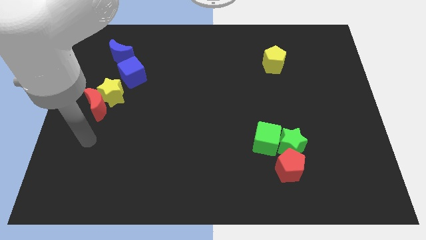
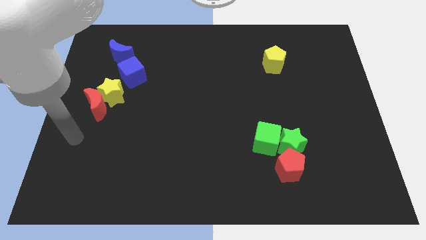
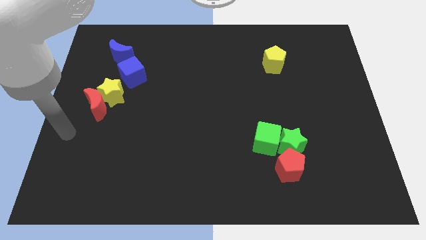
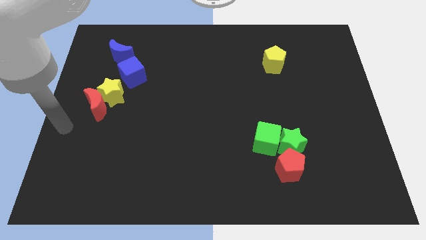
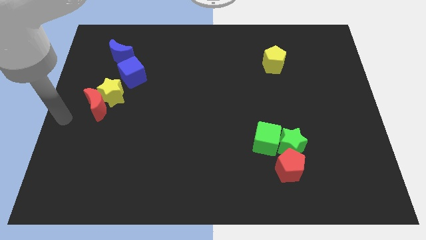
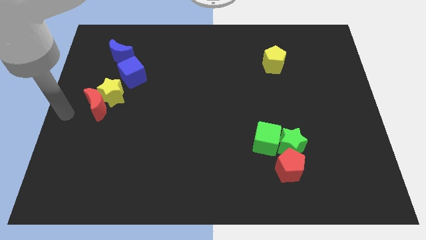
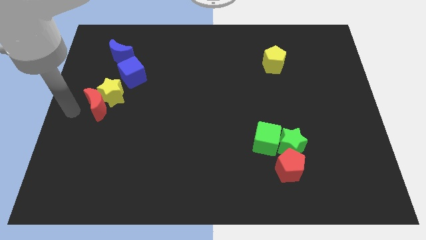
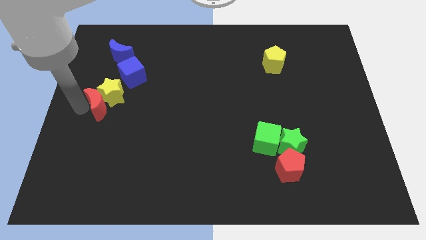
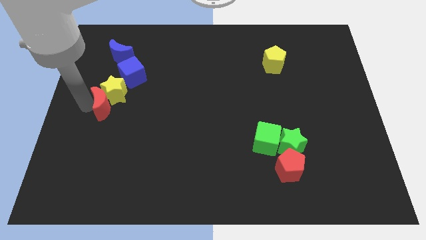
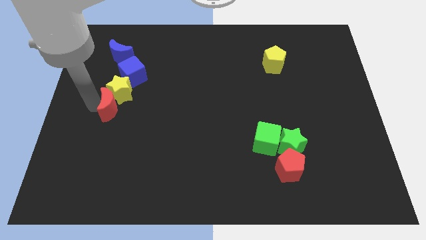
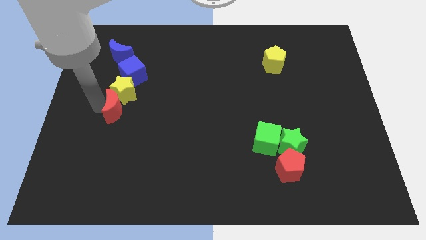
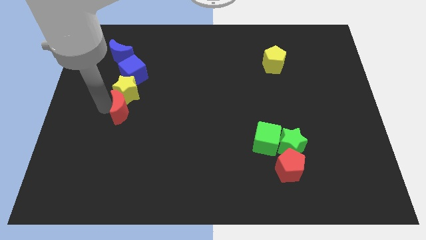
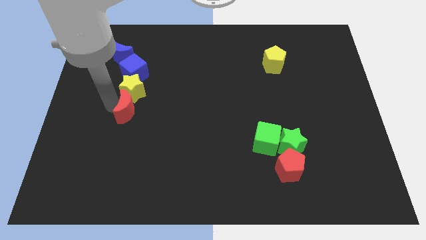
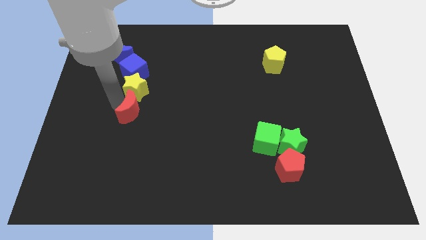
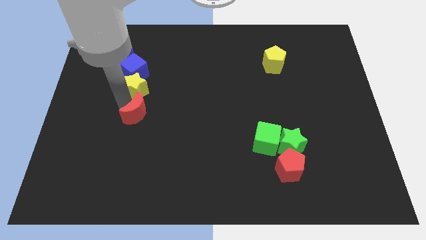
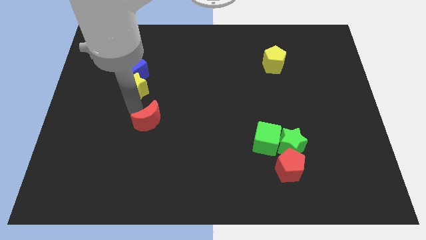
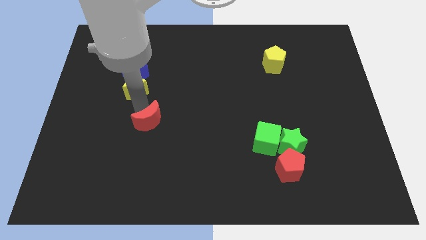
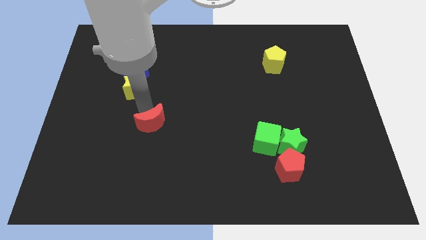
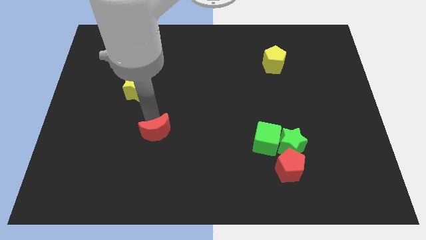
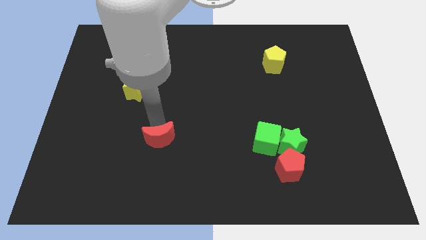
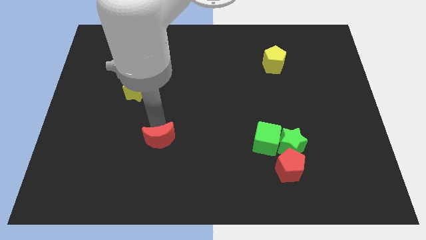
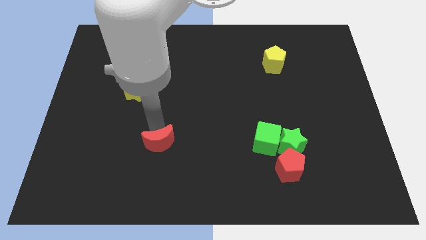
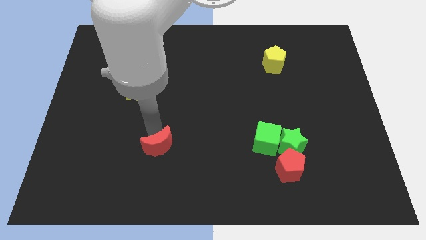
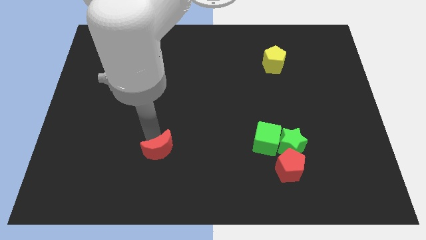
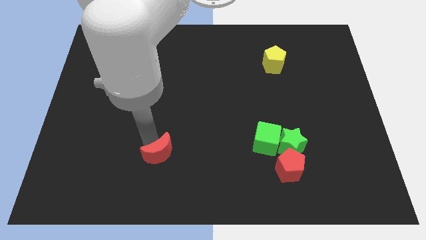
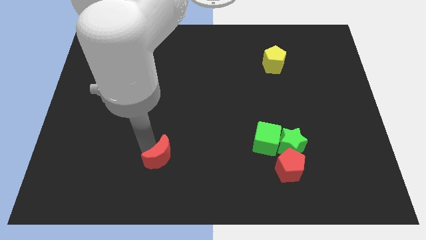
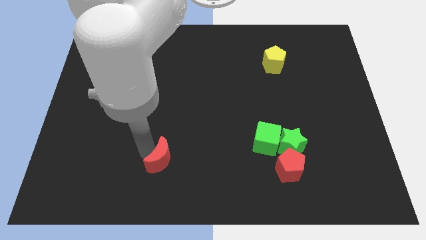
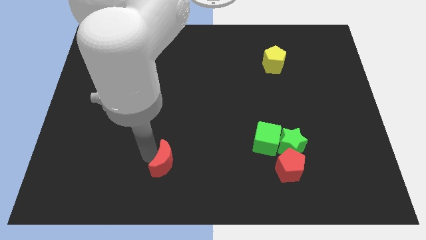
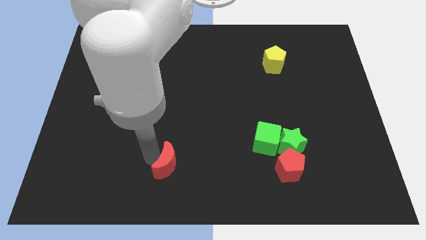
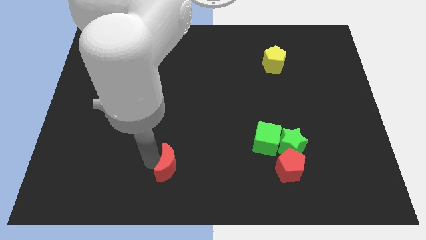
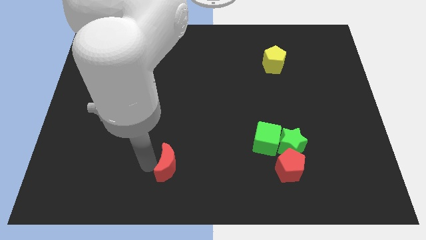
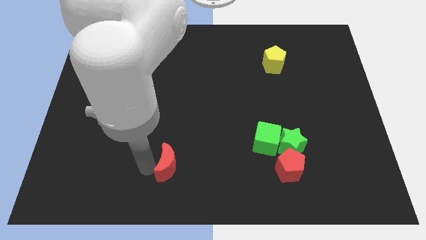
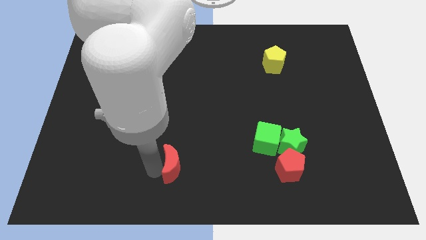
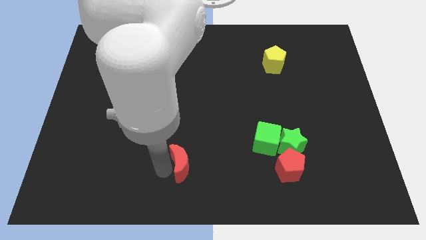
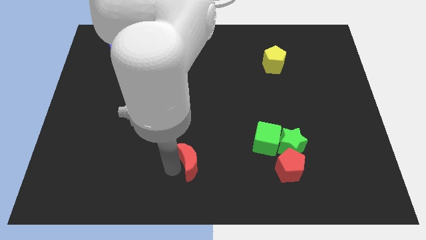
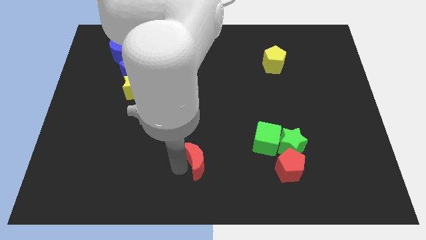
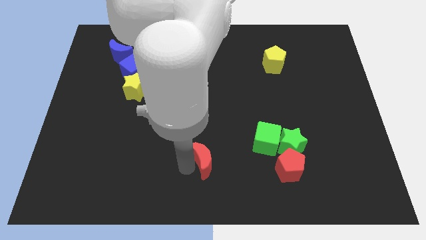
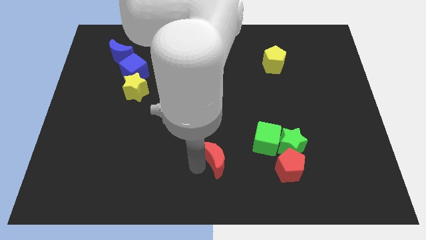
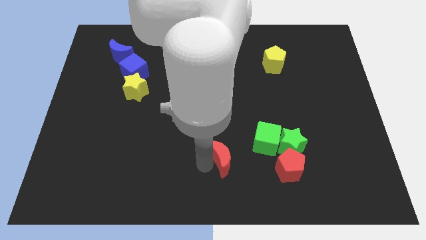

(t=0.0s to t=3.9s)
drag the red moon towards the red pentagon

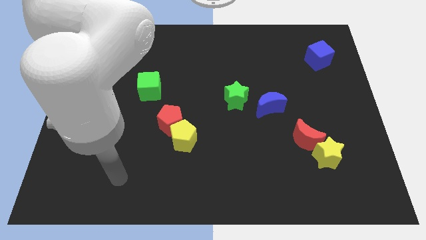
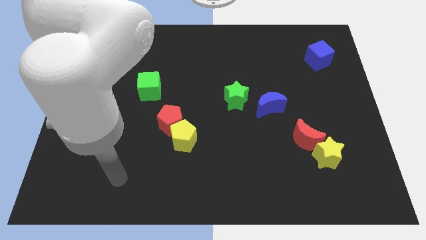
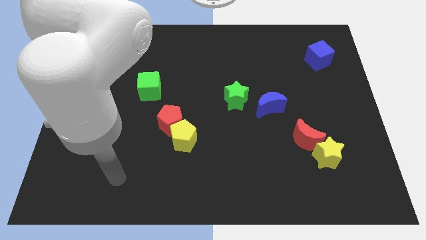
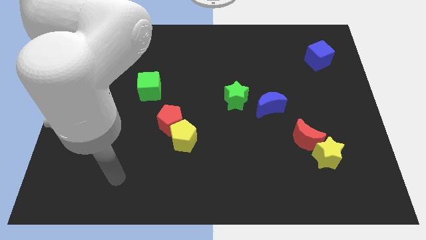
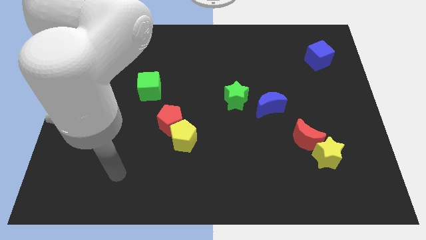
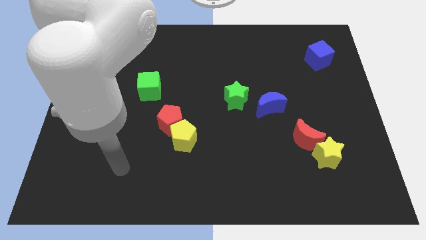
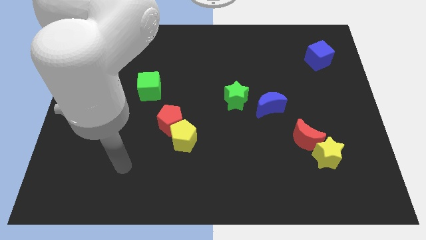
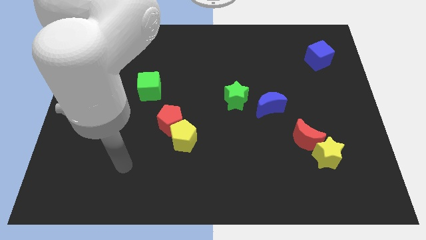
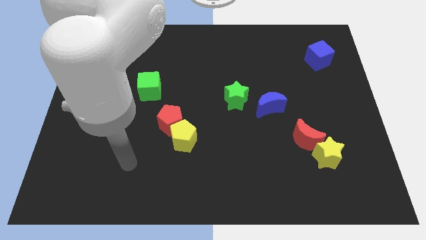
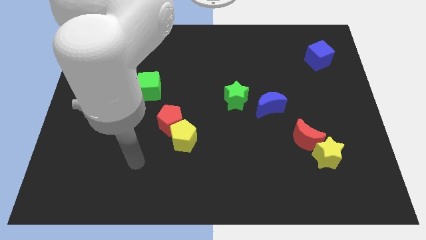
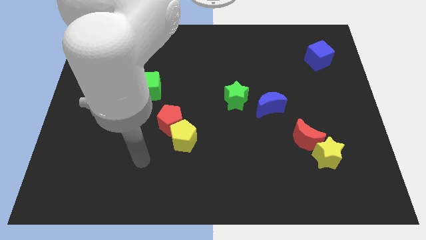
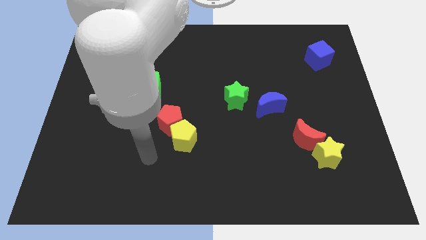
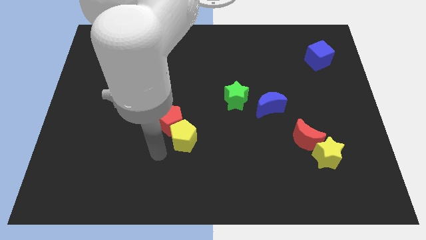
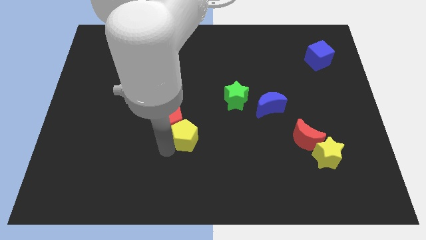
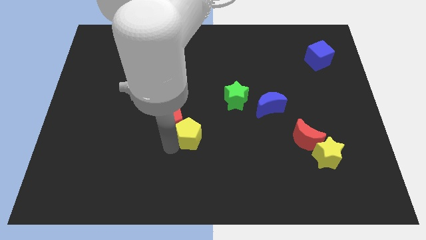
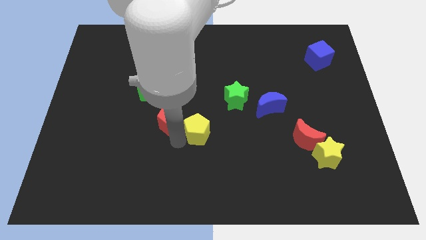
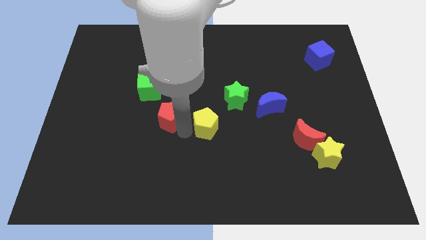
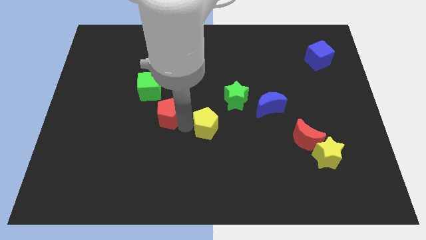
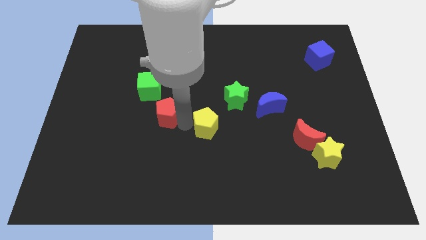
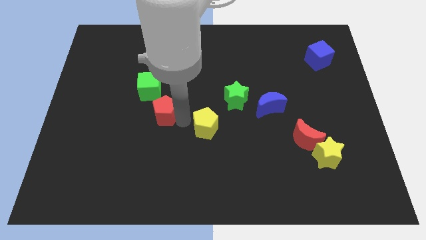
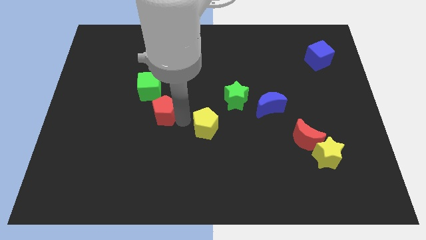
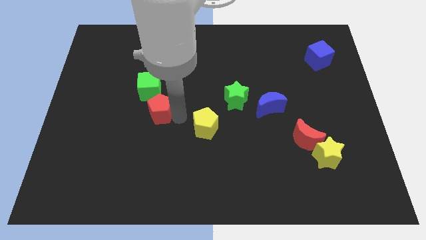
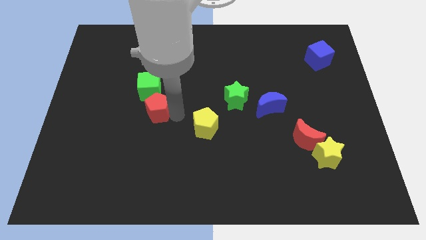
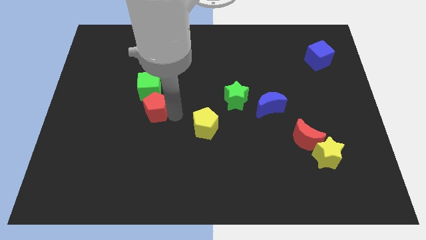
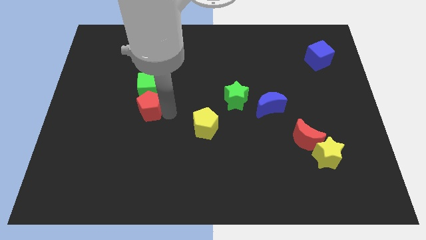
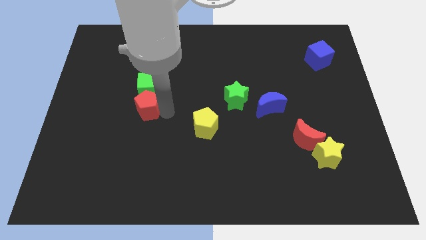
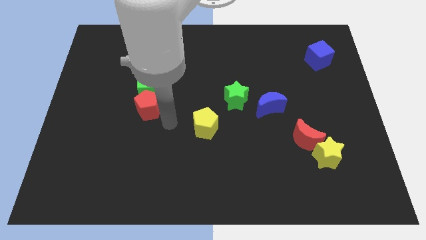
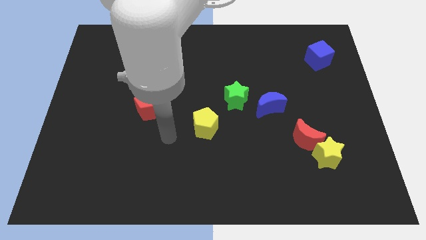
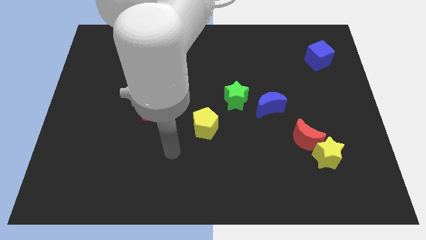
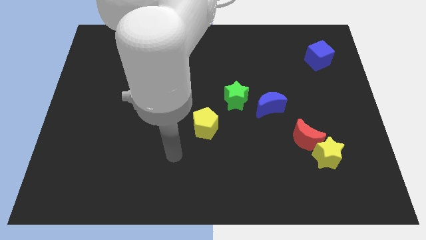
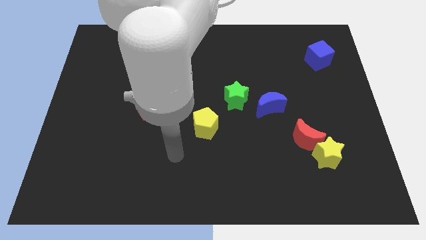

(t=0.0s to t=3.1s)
slide the red pentagon into the bottom side of the green cube

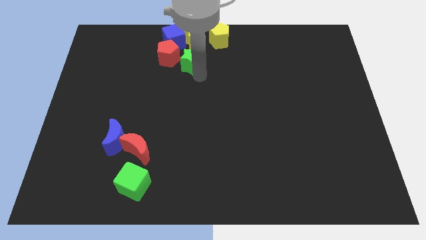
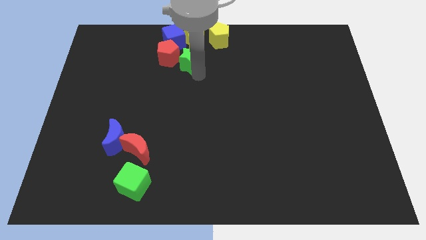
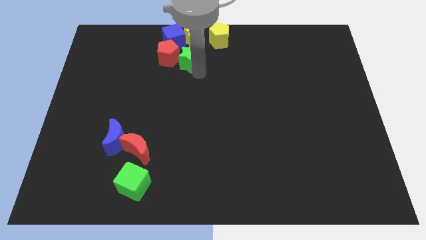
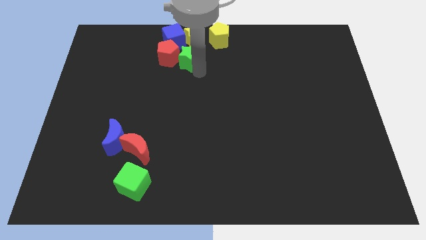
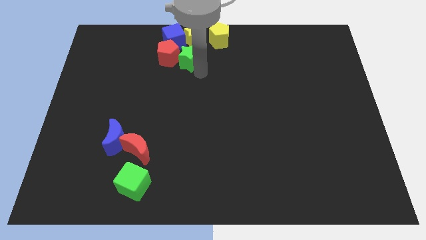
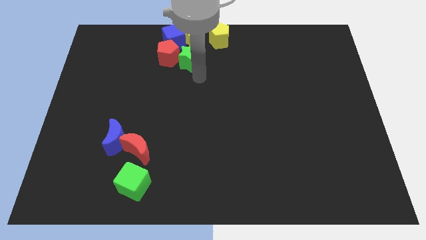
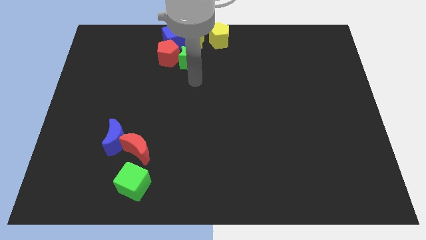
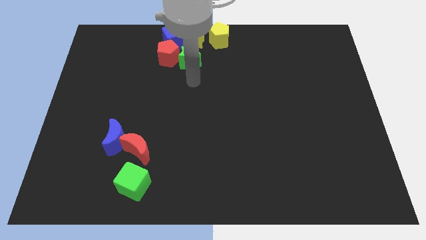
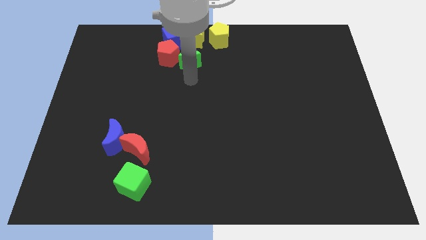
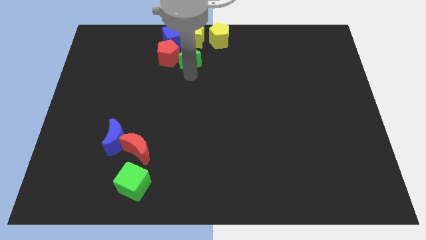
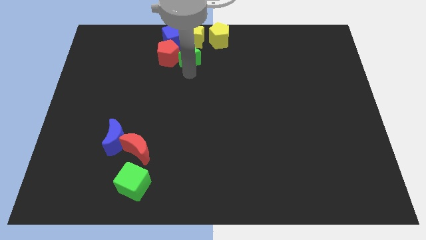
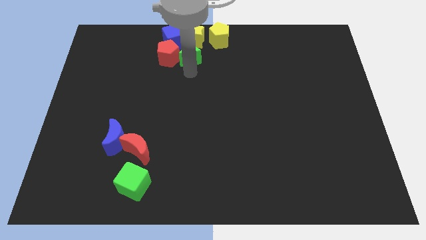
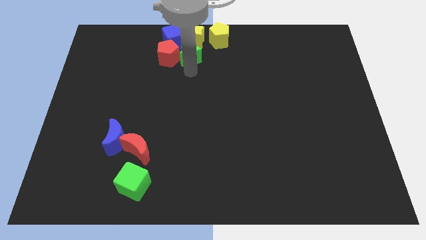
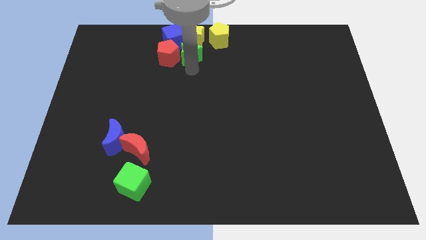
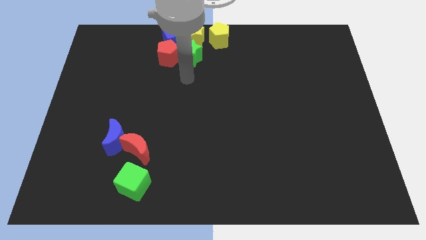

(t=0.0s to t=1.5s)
place the green star right to the red pentagon

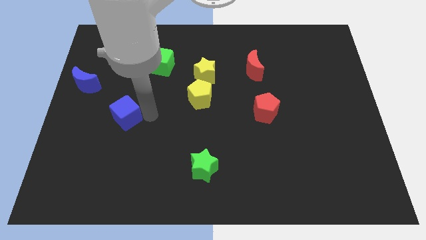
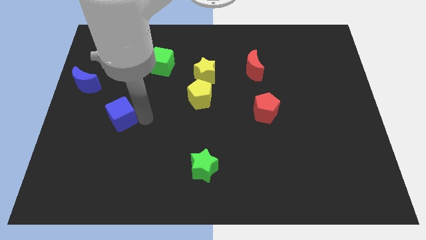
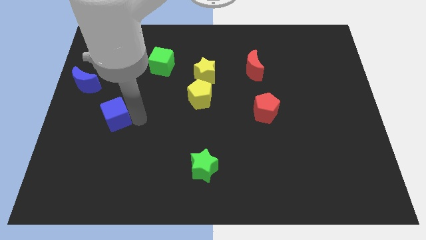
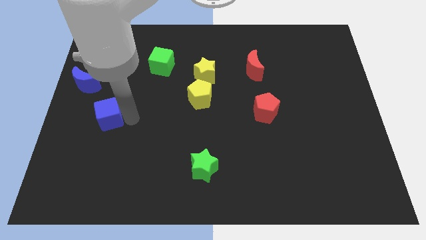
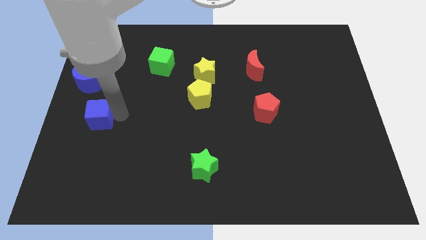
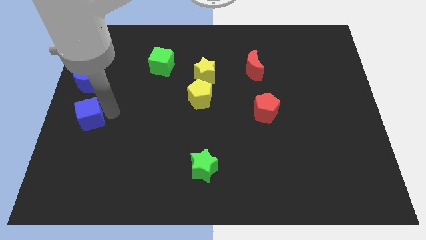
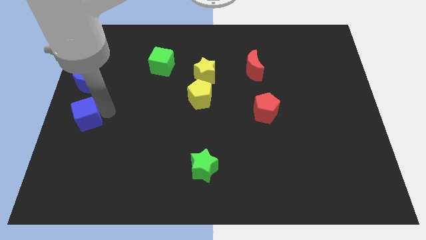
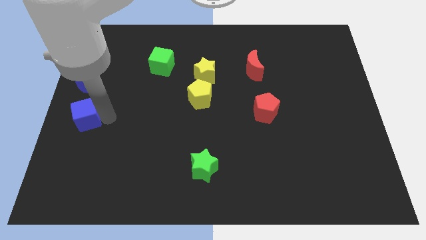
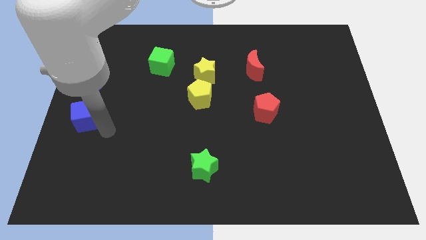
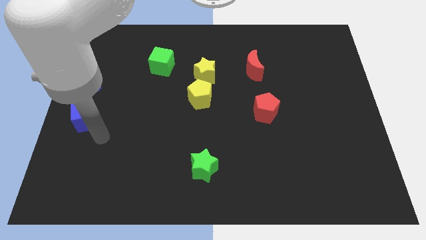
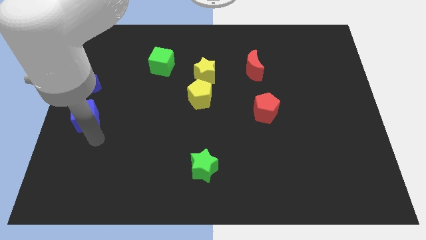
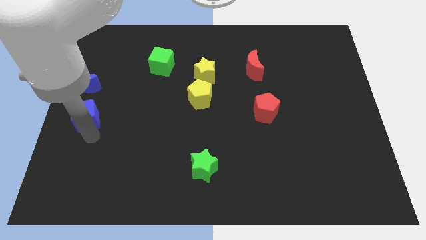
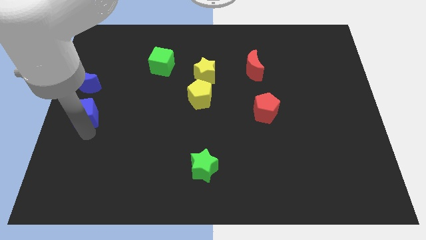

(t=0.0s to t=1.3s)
put the blue cube vertically below the blue moon
